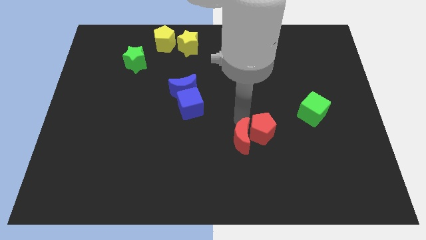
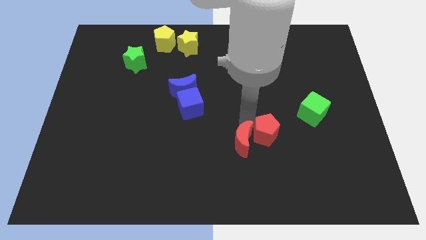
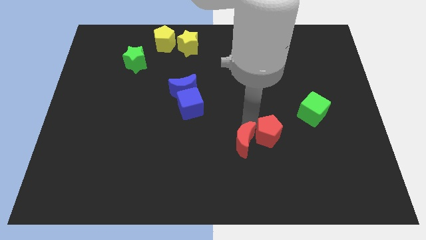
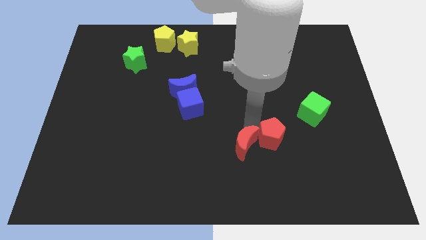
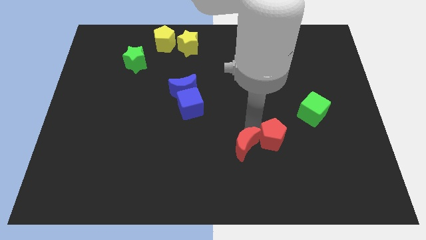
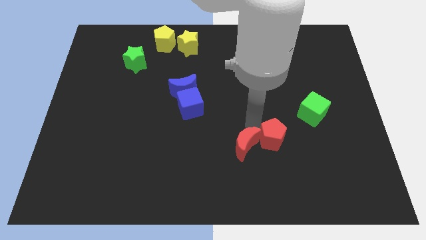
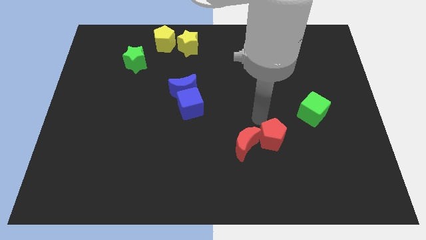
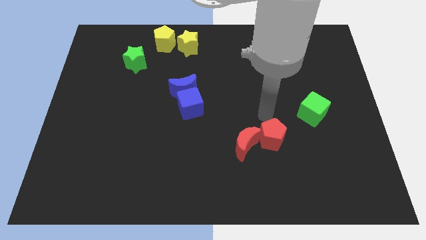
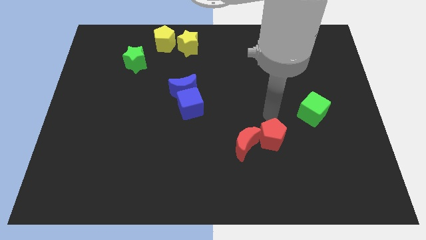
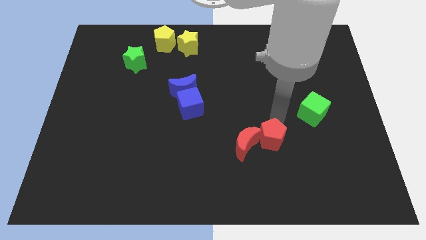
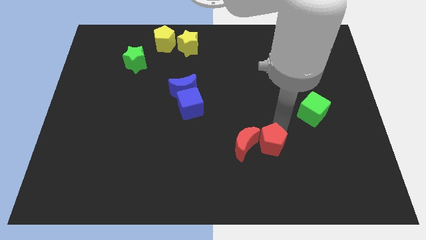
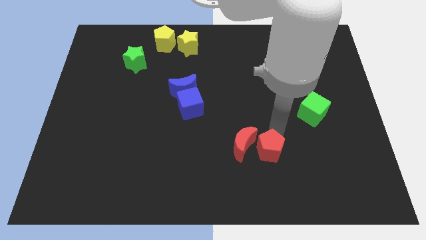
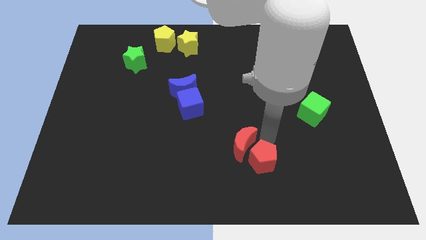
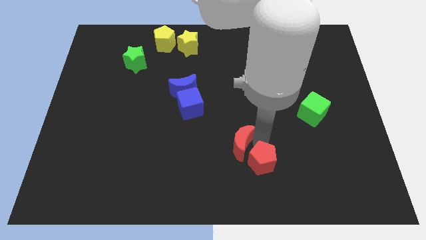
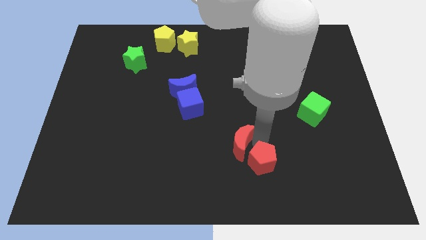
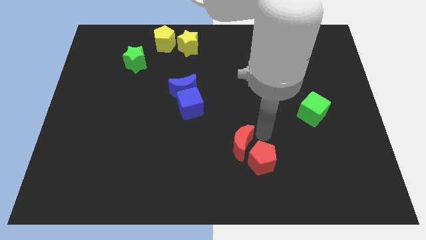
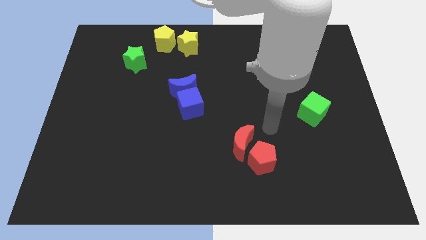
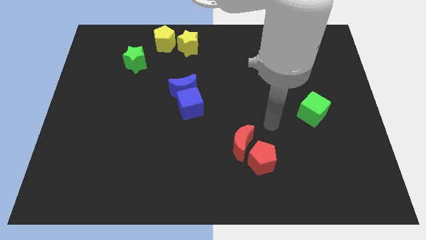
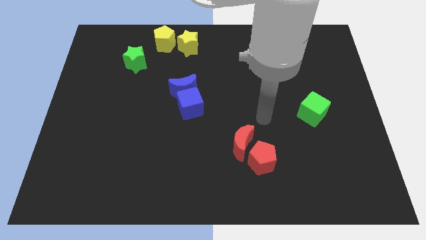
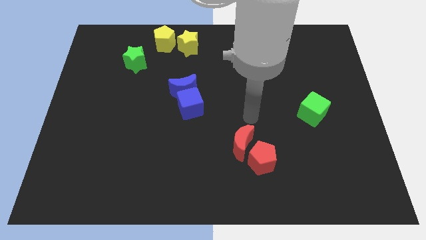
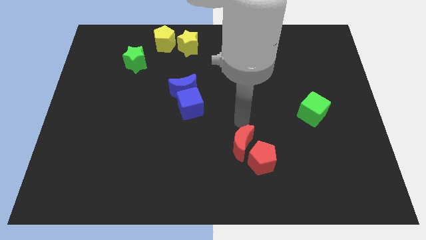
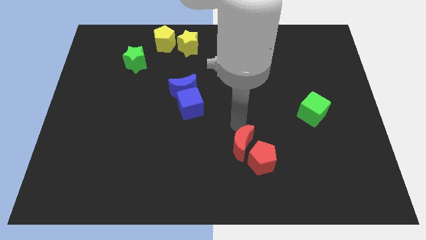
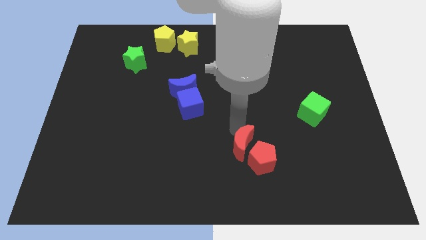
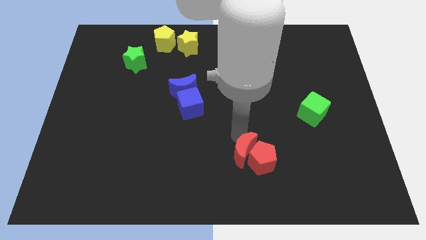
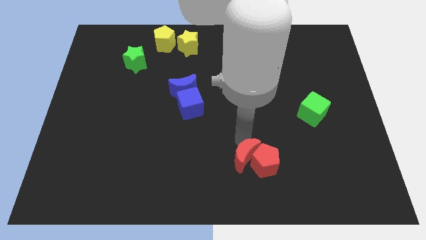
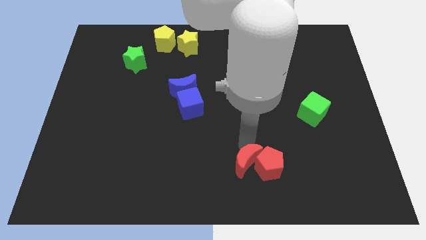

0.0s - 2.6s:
push red blocks to the bottom right of the board

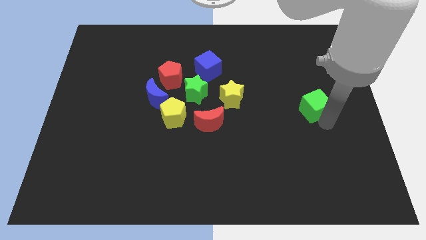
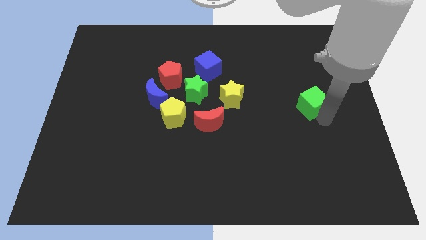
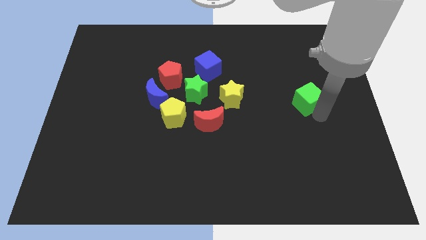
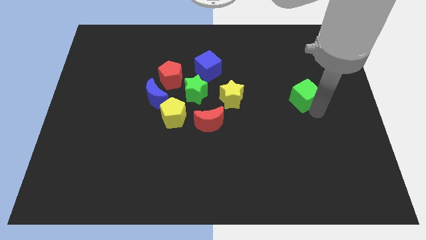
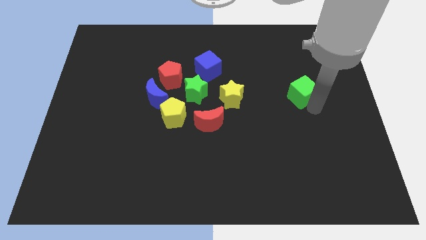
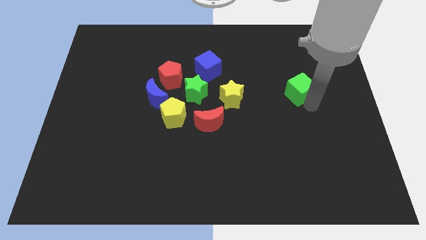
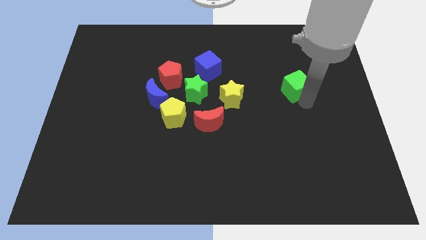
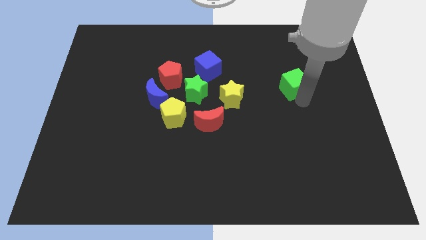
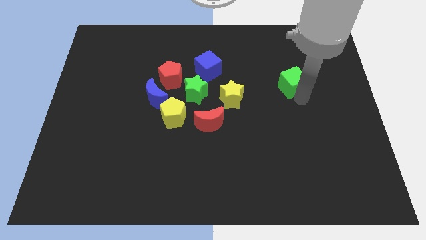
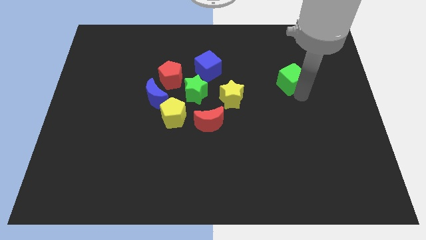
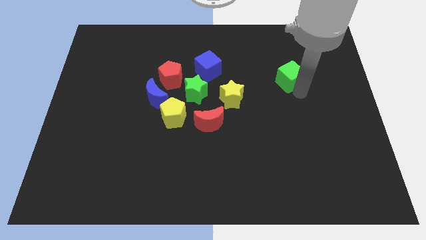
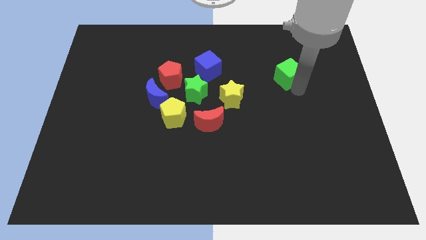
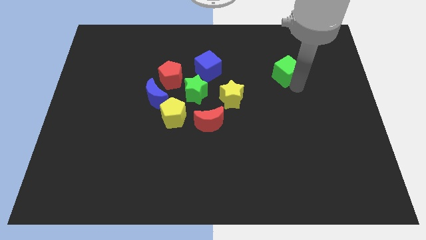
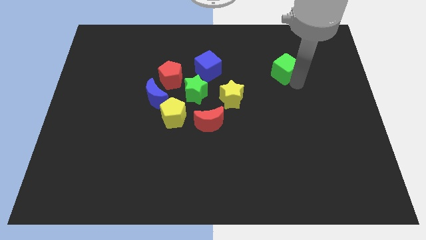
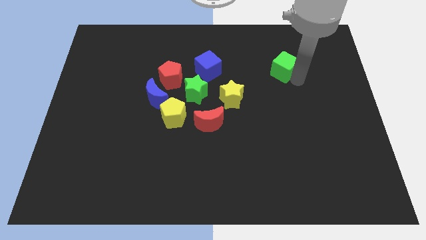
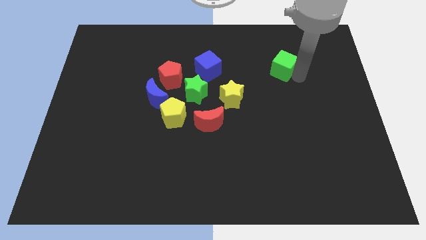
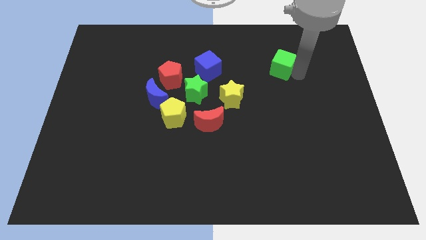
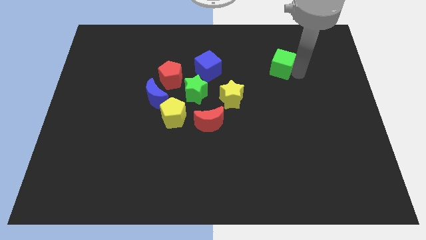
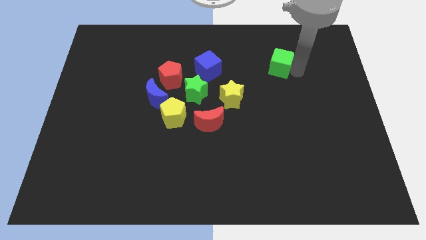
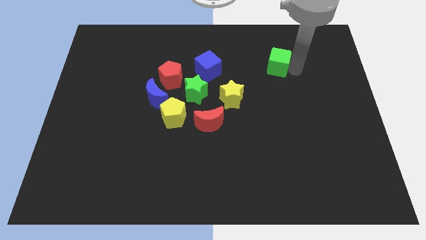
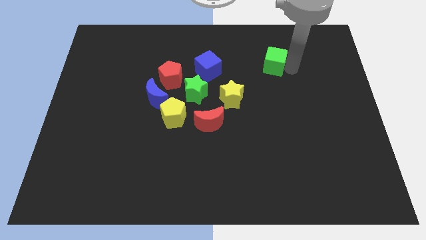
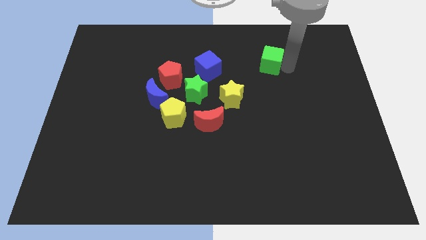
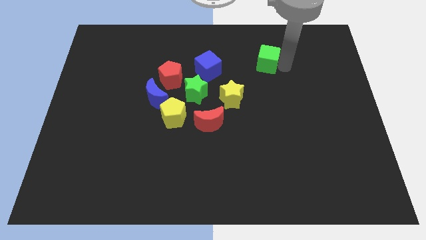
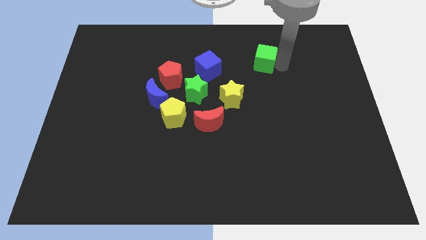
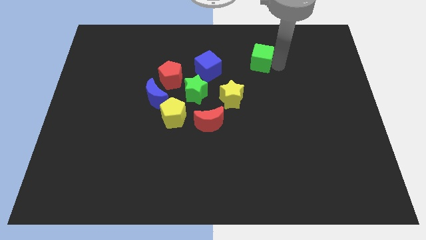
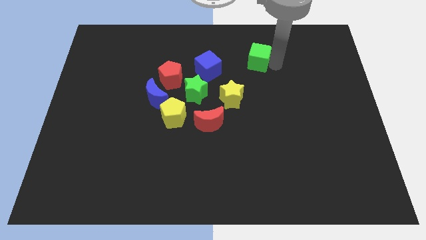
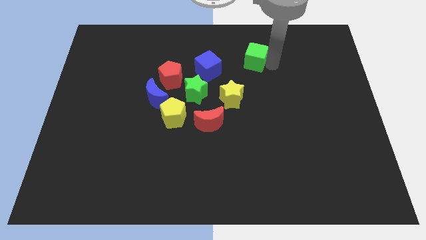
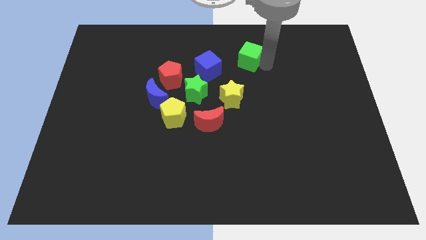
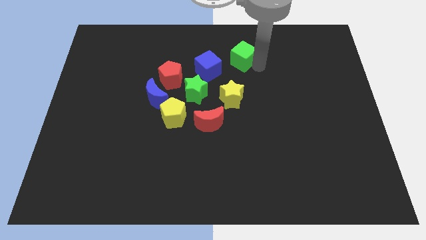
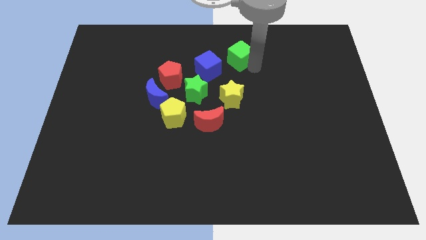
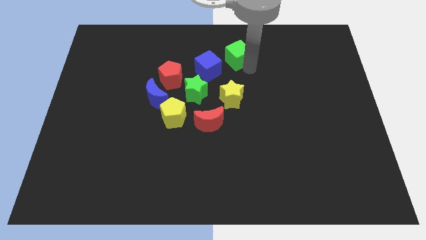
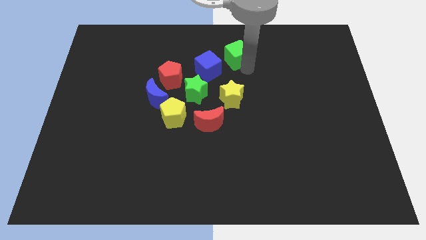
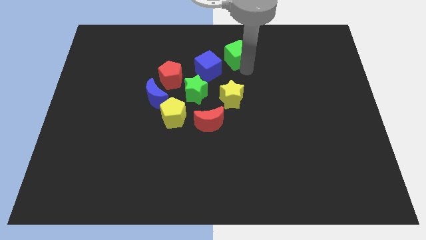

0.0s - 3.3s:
bring the green cube near to the right side of the blue cube

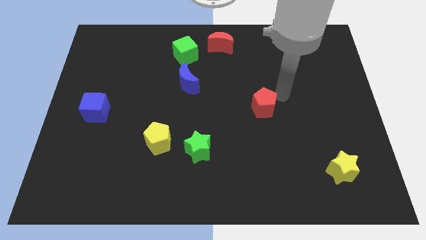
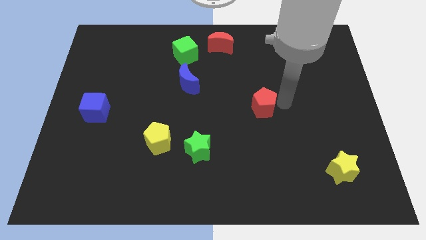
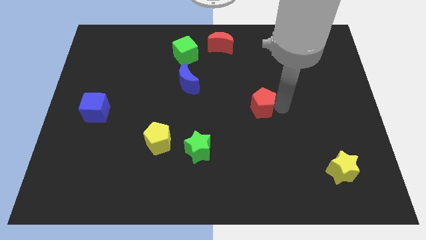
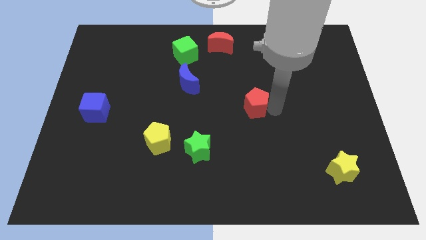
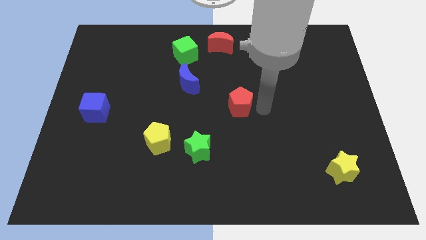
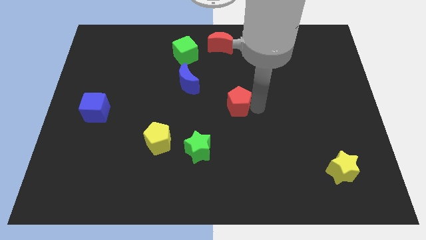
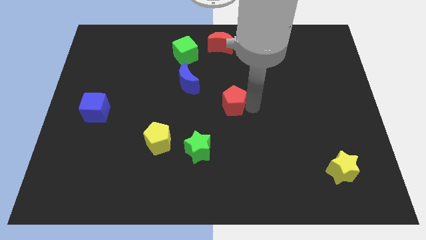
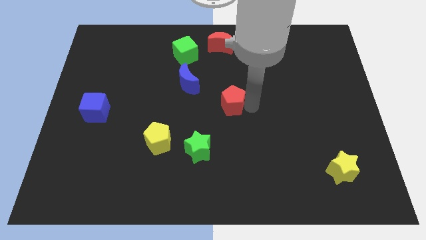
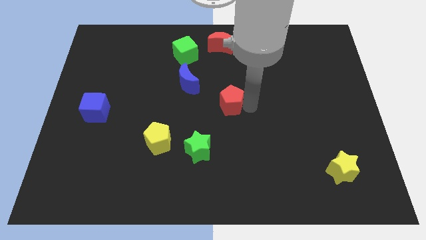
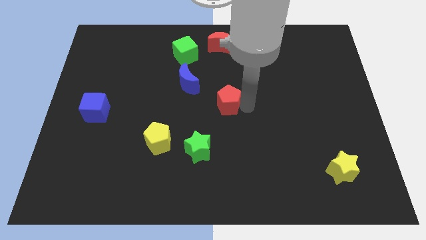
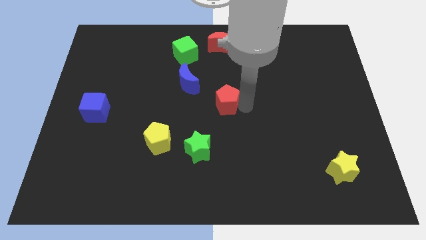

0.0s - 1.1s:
push the red pentagon diagonally bottom right to the blue crescent

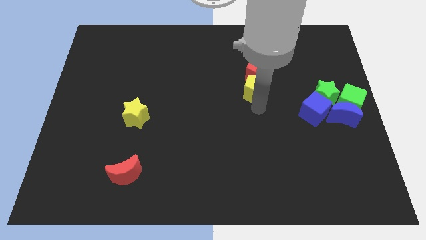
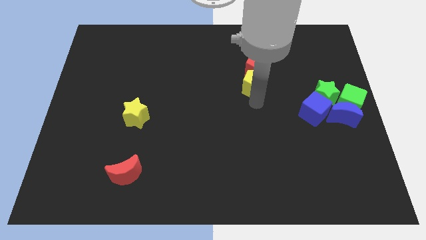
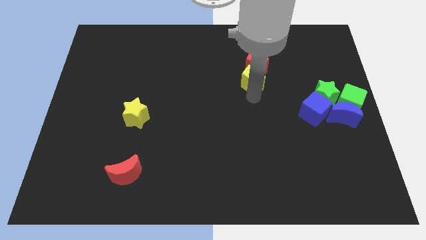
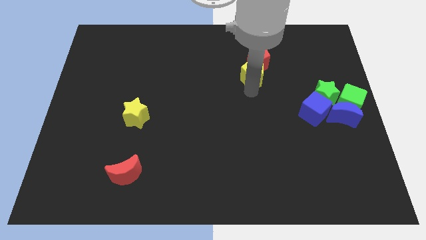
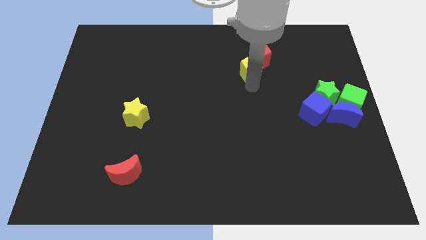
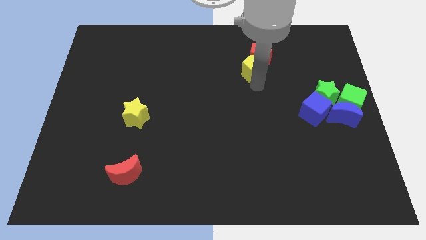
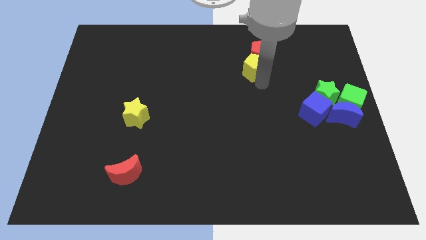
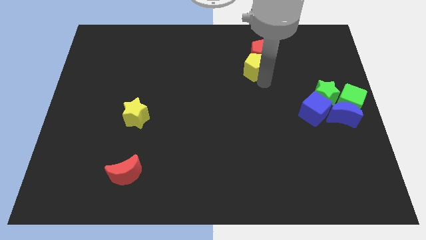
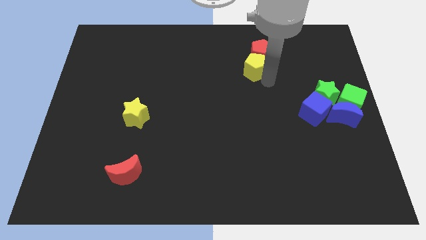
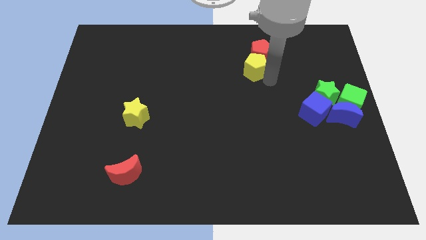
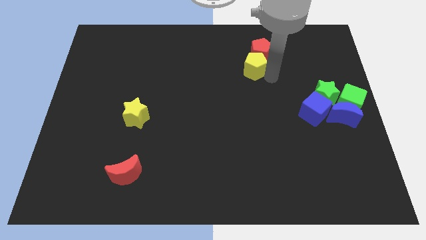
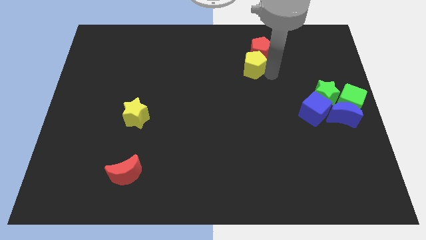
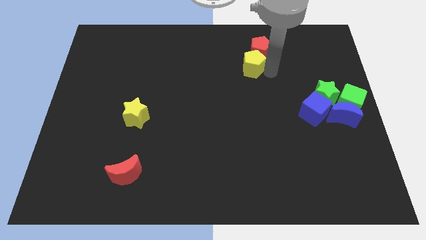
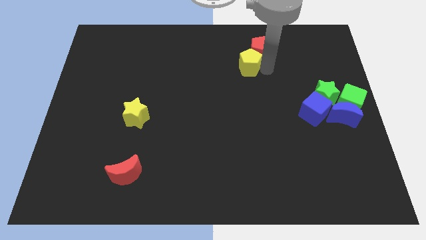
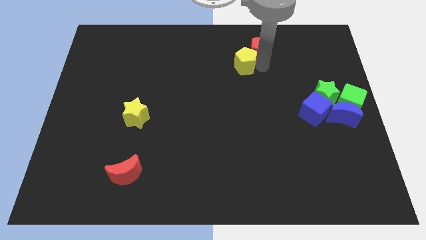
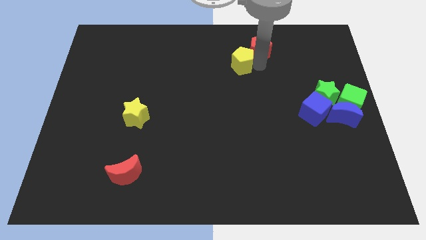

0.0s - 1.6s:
push the yellow pentagon into the red pentagon

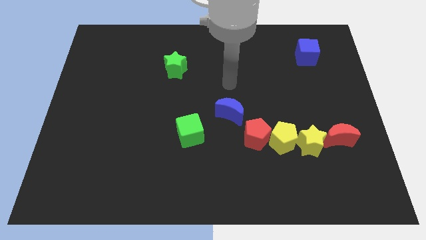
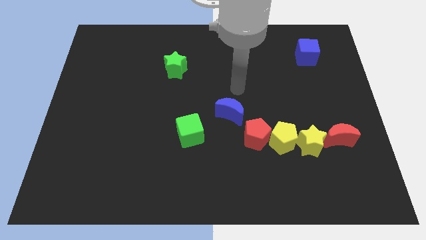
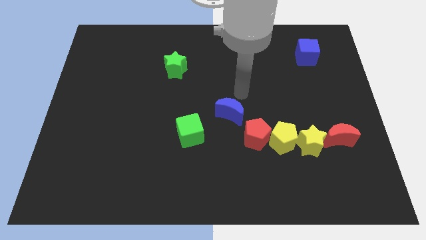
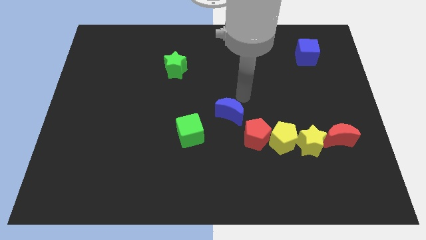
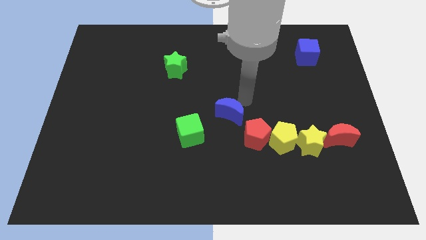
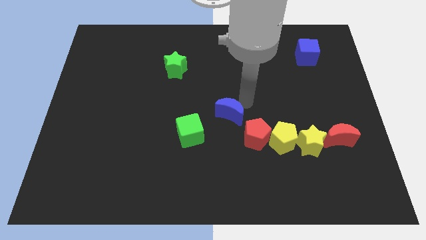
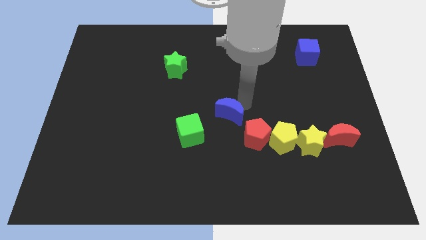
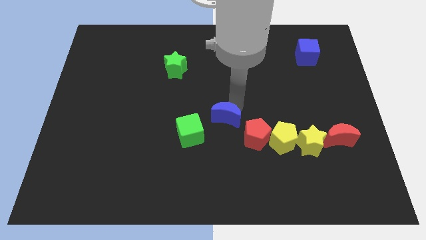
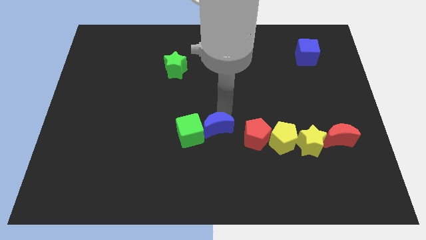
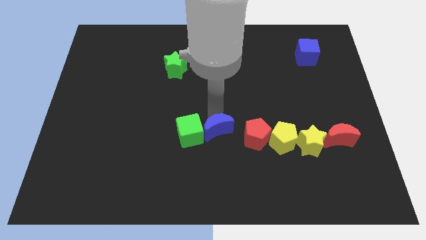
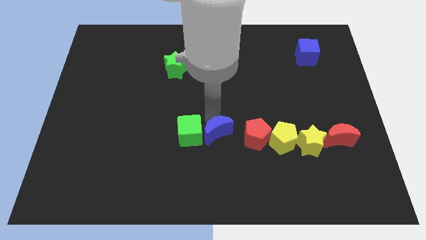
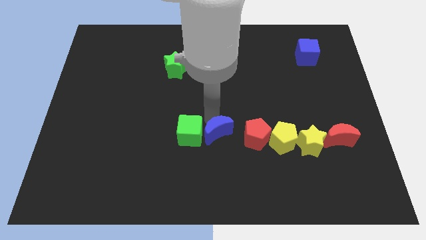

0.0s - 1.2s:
move the blue crescent to the right of the green cube
